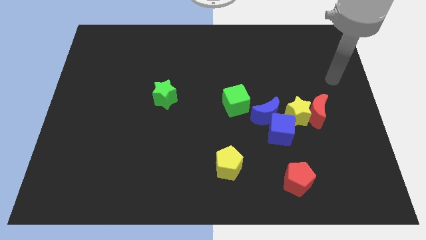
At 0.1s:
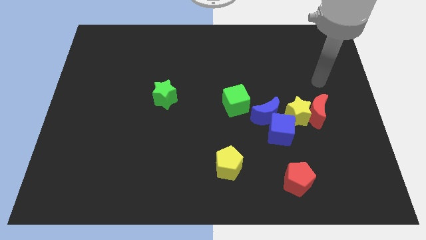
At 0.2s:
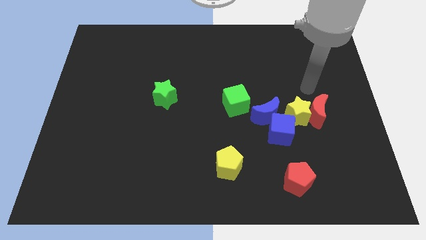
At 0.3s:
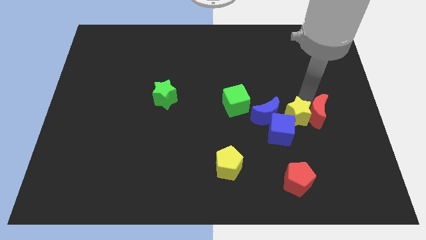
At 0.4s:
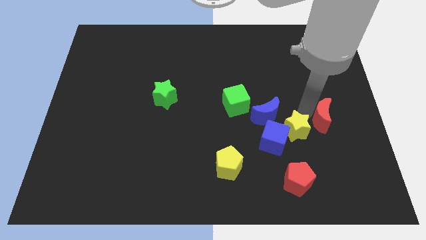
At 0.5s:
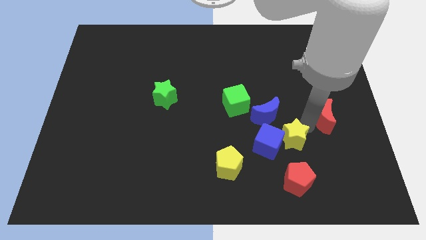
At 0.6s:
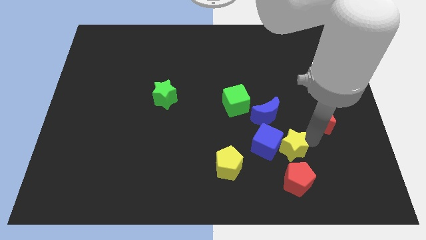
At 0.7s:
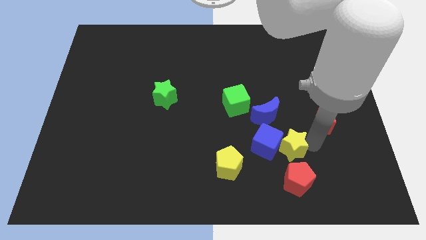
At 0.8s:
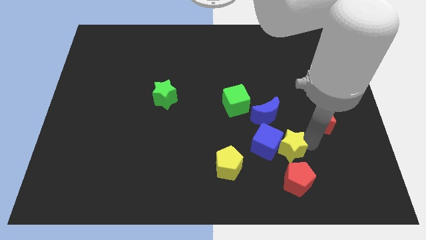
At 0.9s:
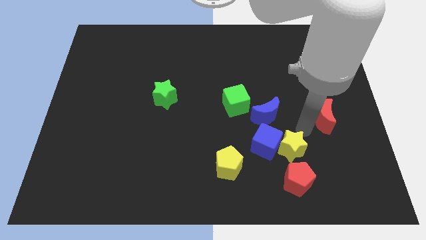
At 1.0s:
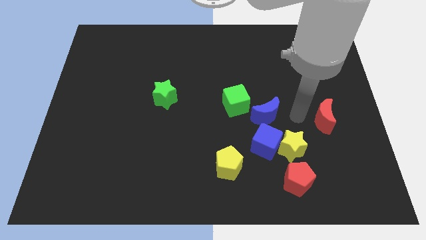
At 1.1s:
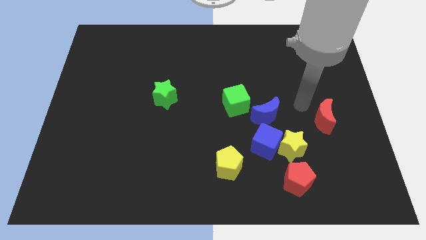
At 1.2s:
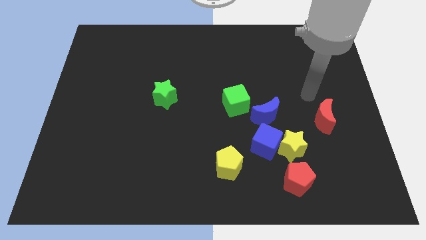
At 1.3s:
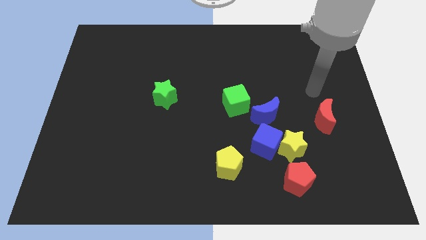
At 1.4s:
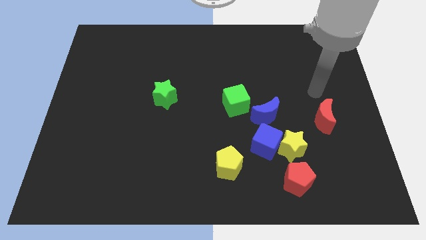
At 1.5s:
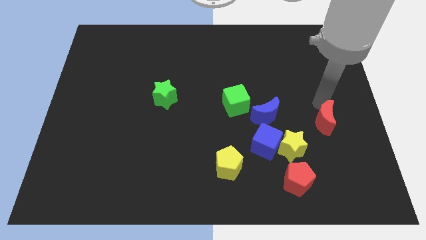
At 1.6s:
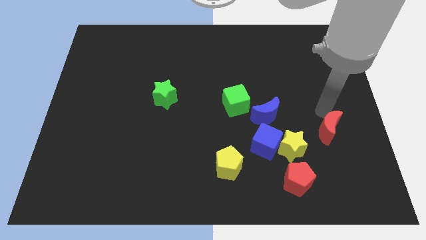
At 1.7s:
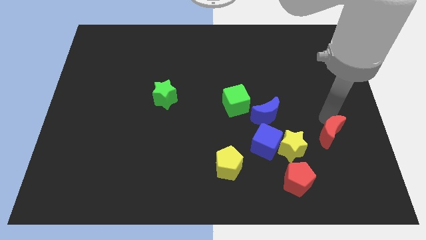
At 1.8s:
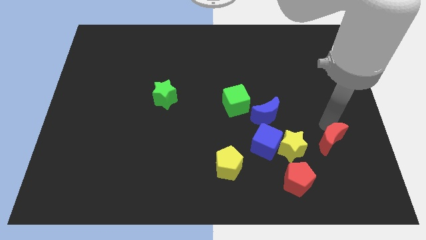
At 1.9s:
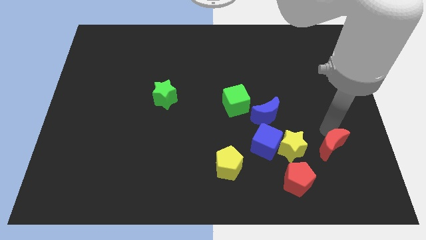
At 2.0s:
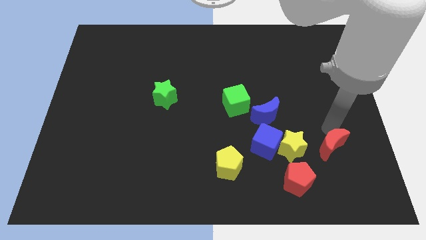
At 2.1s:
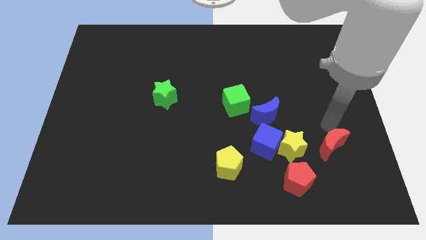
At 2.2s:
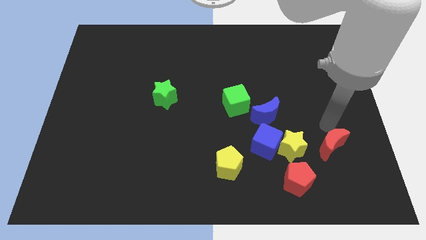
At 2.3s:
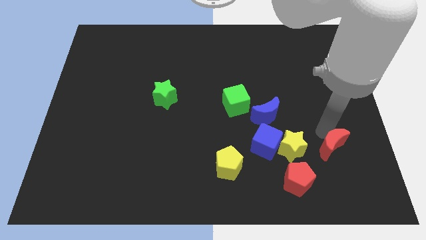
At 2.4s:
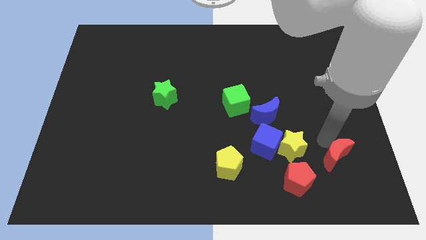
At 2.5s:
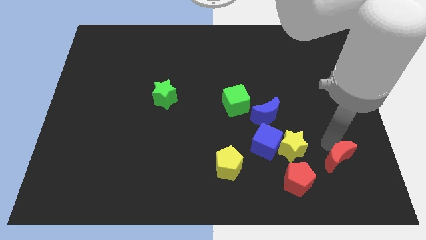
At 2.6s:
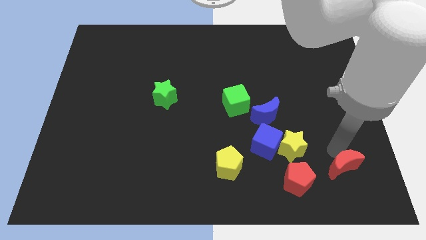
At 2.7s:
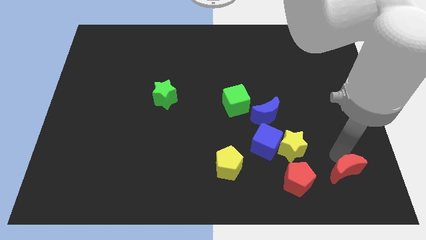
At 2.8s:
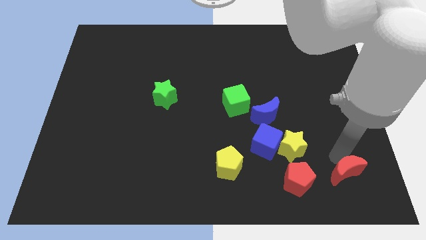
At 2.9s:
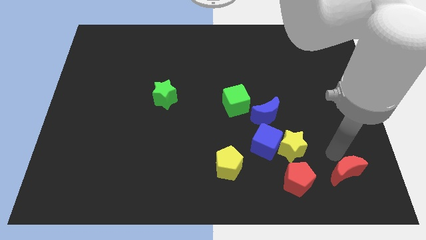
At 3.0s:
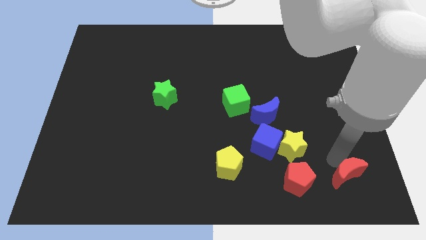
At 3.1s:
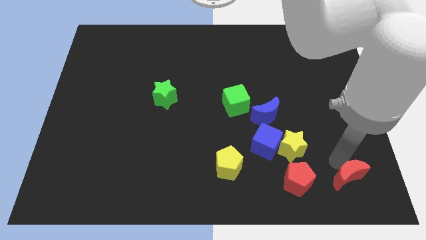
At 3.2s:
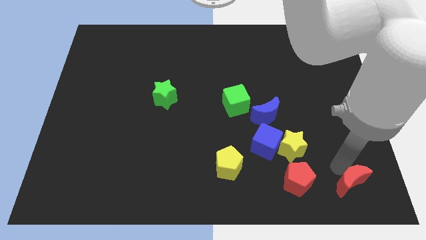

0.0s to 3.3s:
put the red moon diagonally bottom right to the yellow star

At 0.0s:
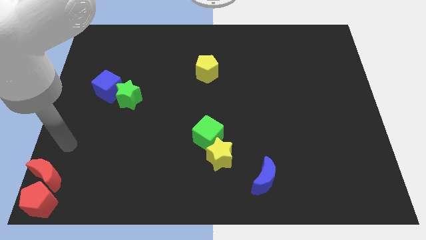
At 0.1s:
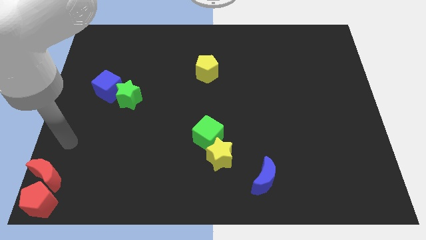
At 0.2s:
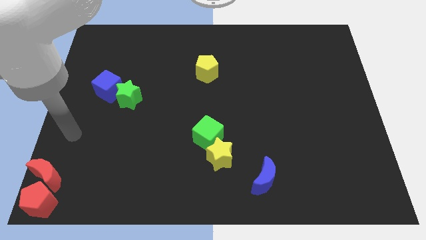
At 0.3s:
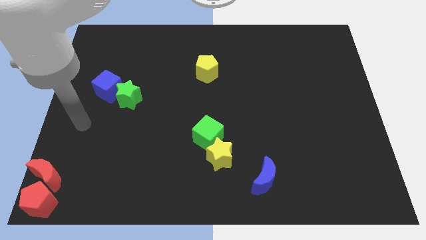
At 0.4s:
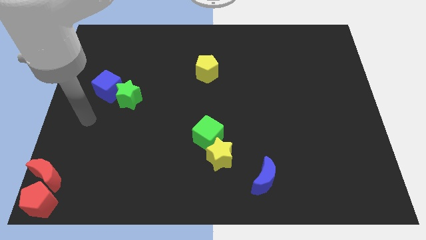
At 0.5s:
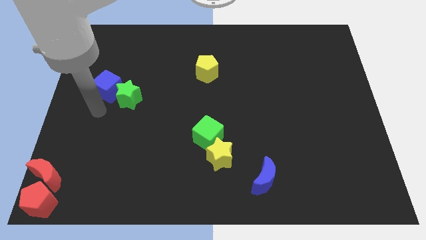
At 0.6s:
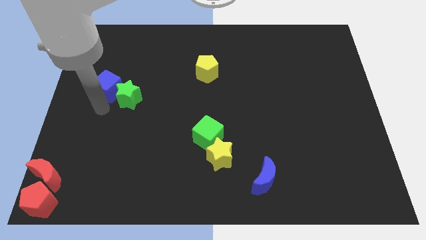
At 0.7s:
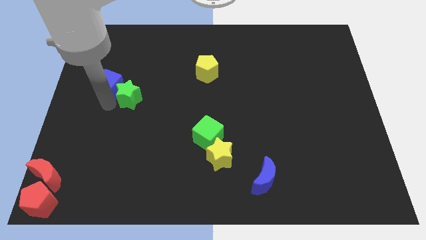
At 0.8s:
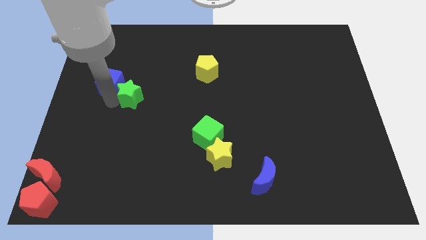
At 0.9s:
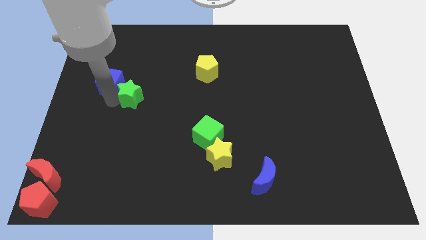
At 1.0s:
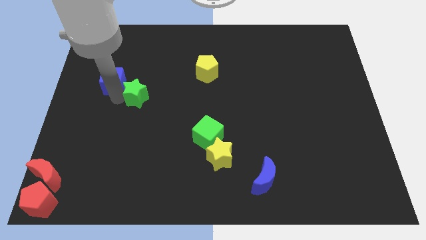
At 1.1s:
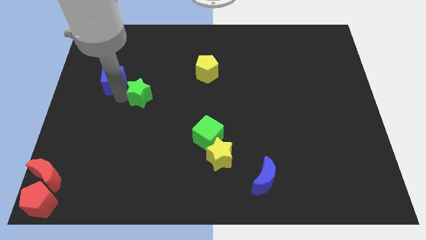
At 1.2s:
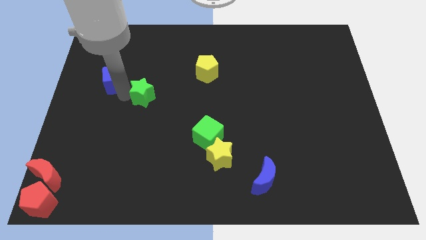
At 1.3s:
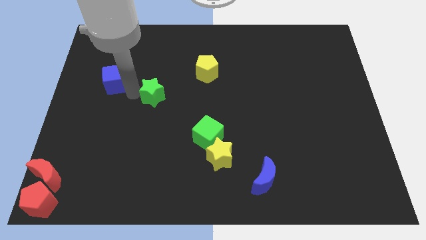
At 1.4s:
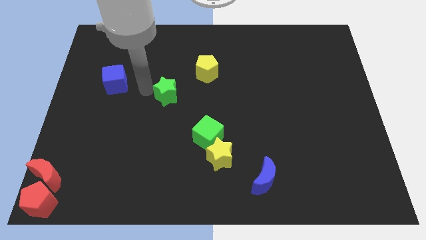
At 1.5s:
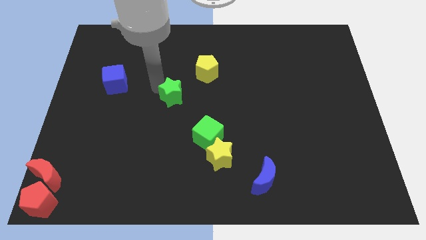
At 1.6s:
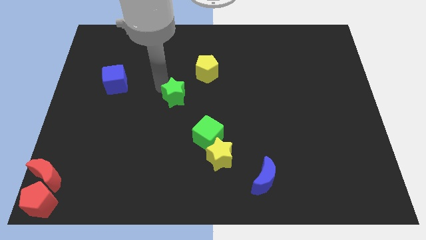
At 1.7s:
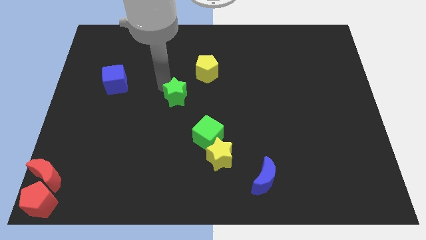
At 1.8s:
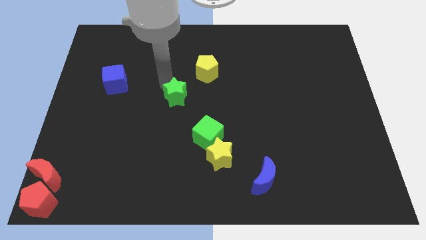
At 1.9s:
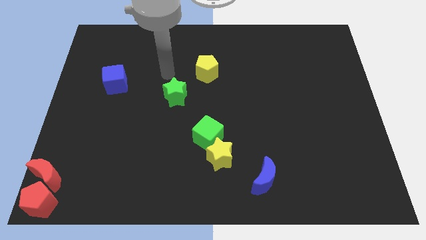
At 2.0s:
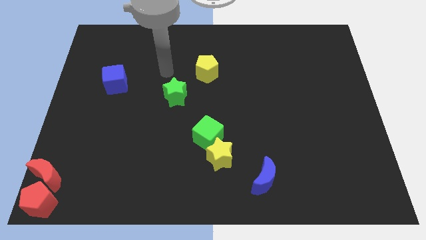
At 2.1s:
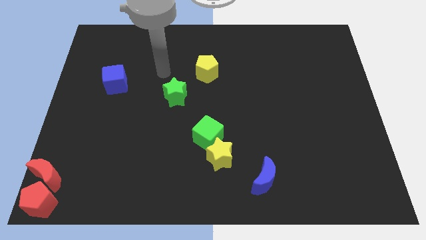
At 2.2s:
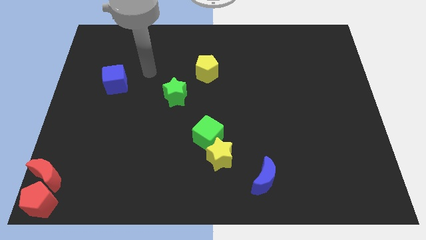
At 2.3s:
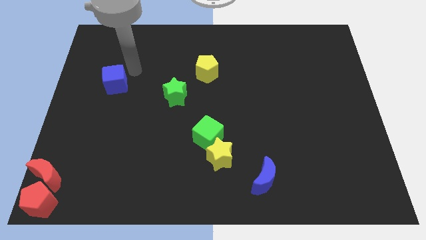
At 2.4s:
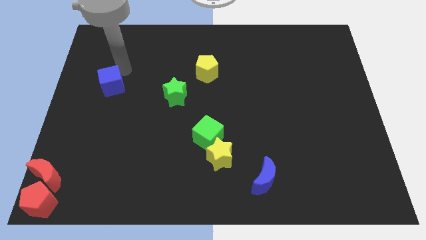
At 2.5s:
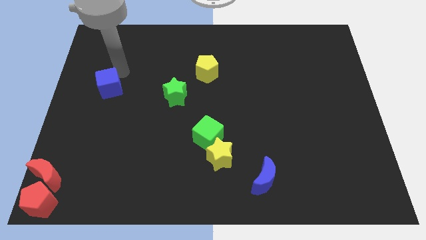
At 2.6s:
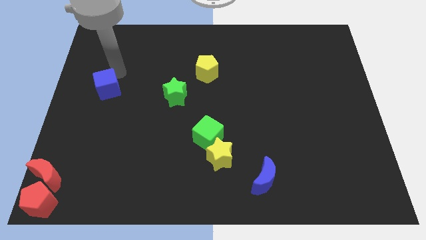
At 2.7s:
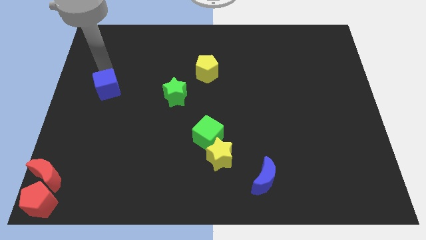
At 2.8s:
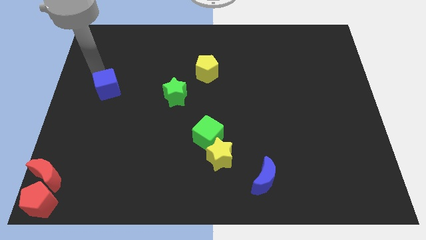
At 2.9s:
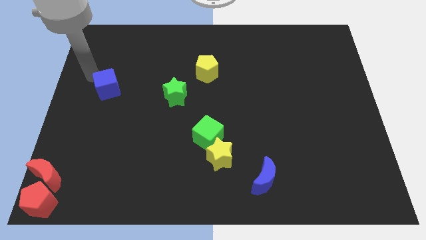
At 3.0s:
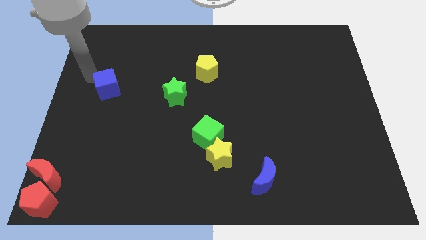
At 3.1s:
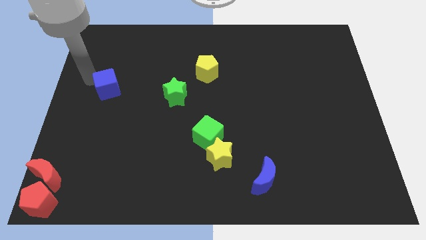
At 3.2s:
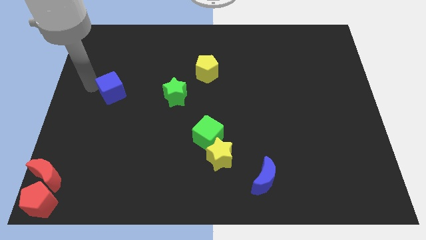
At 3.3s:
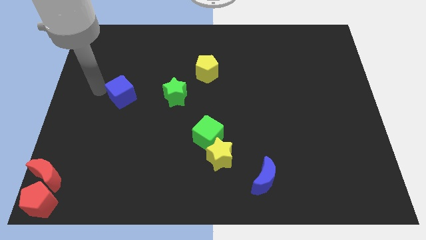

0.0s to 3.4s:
separate the blue cube and the green star

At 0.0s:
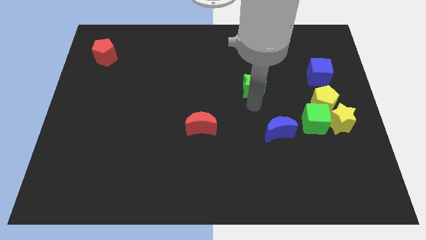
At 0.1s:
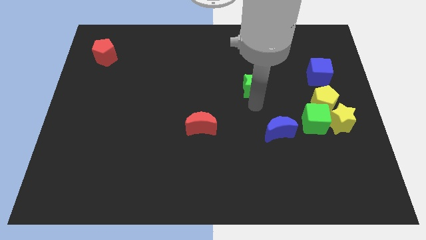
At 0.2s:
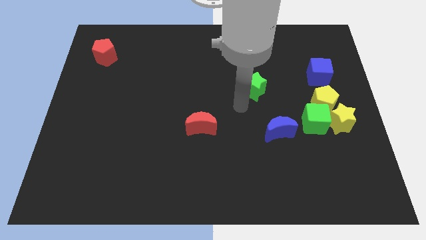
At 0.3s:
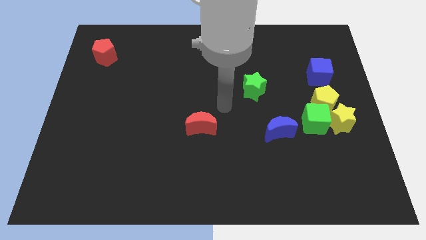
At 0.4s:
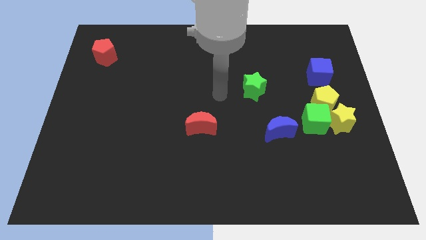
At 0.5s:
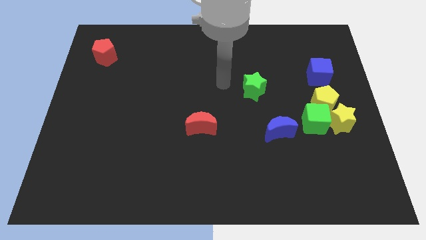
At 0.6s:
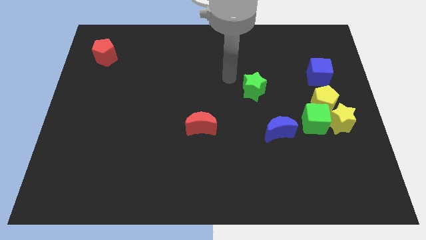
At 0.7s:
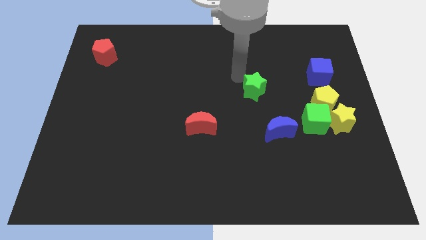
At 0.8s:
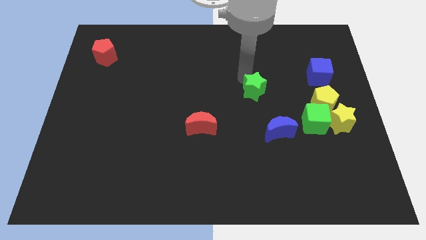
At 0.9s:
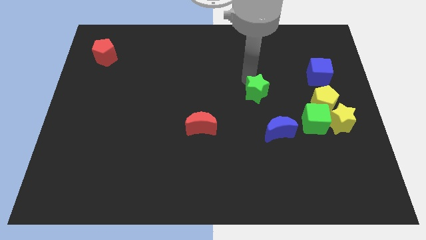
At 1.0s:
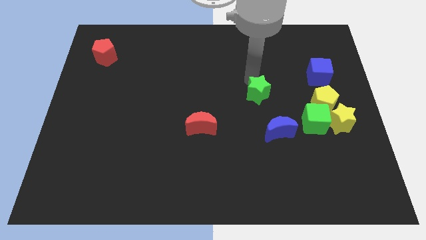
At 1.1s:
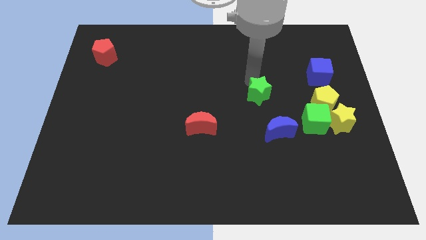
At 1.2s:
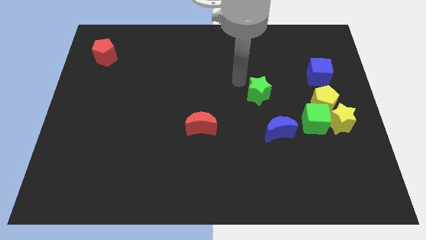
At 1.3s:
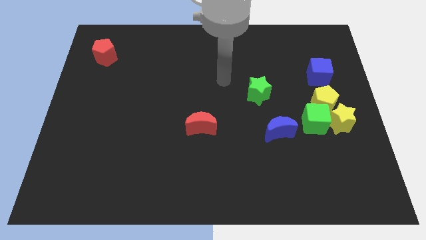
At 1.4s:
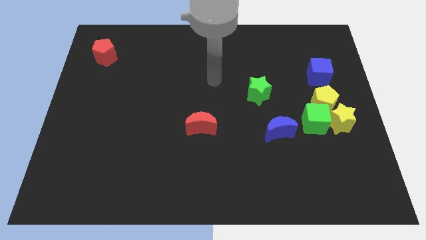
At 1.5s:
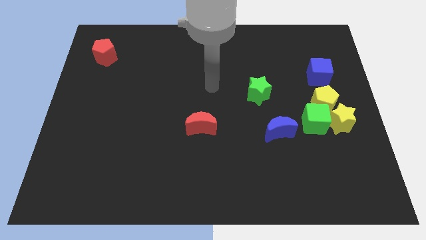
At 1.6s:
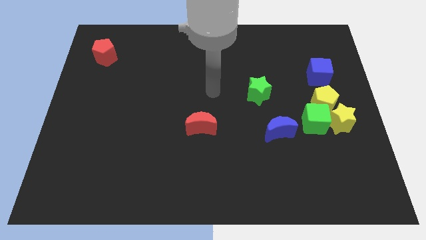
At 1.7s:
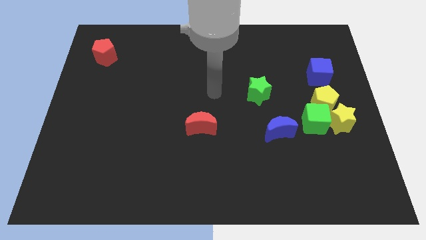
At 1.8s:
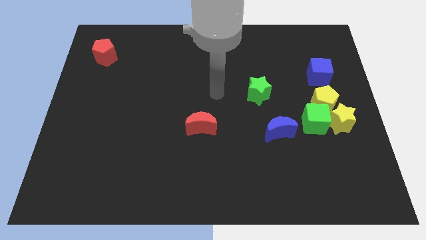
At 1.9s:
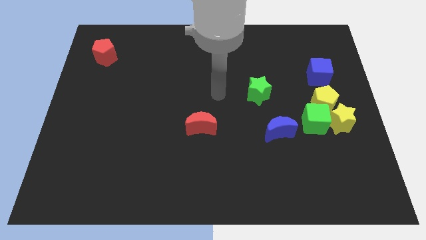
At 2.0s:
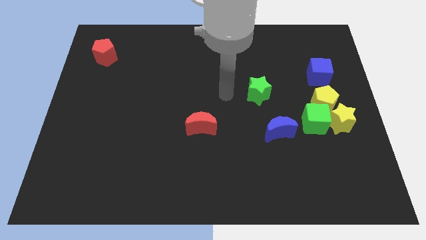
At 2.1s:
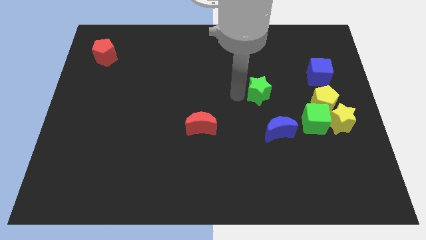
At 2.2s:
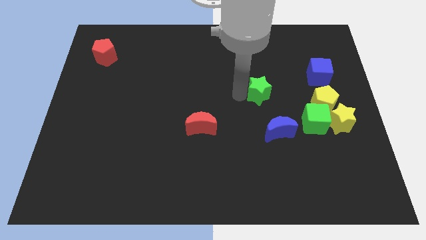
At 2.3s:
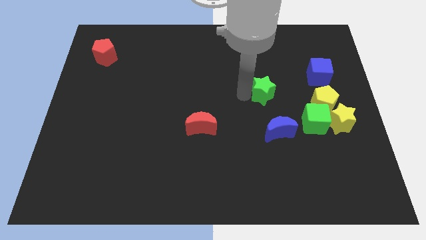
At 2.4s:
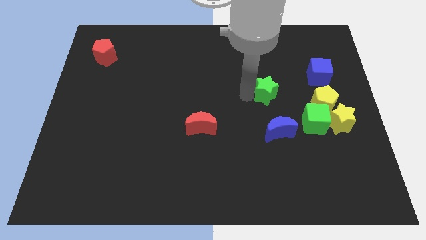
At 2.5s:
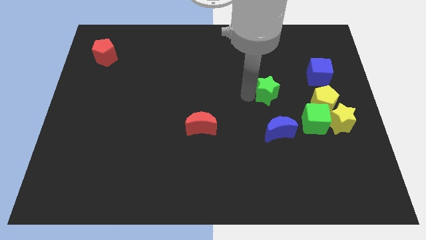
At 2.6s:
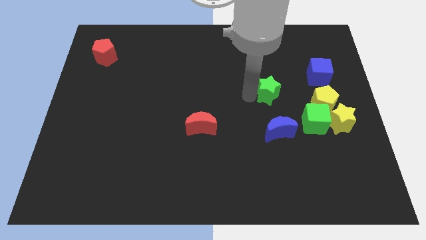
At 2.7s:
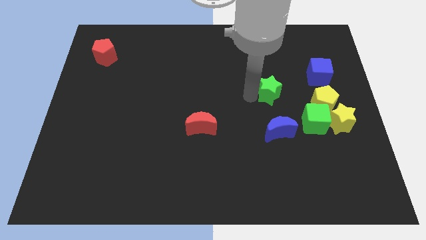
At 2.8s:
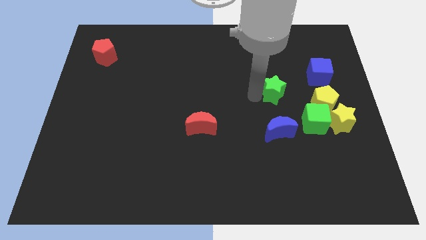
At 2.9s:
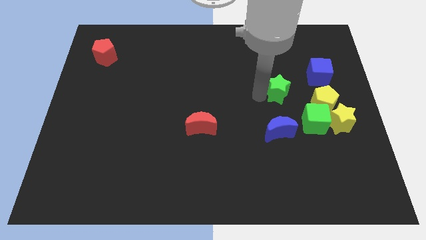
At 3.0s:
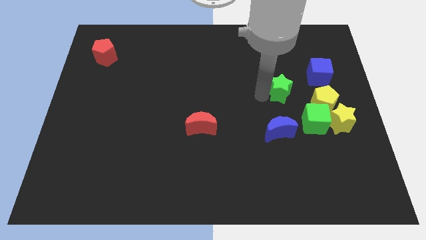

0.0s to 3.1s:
push the green star vertically above the blue crescent
